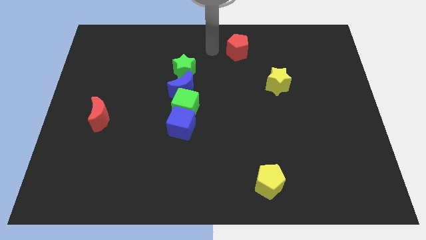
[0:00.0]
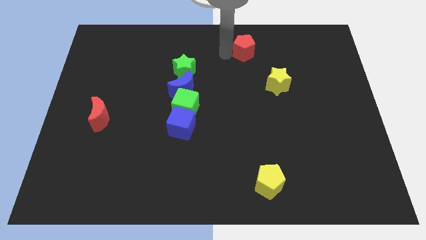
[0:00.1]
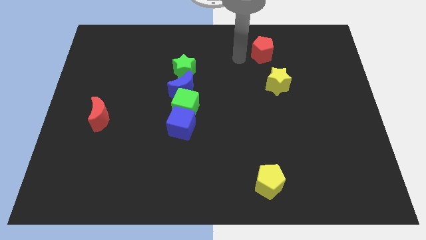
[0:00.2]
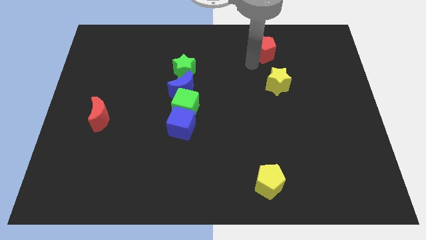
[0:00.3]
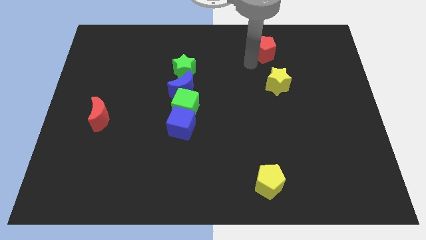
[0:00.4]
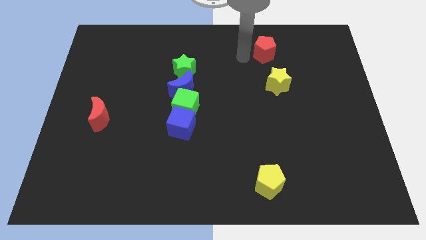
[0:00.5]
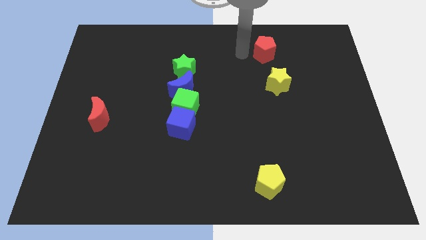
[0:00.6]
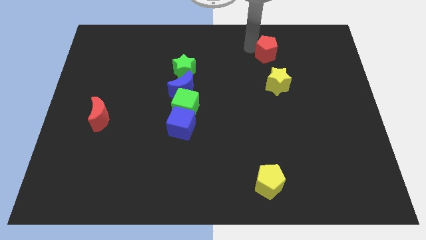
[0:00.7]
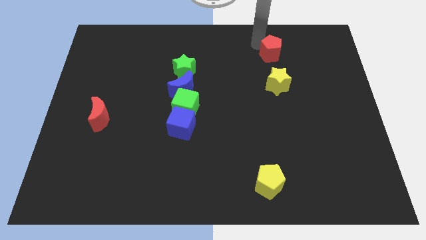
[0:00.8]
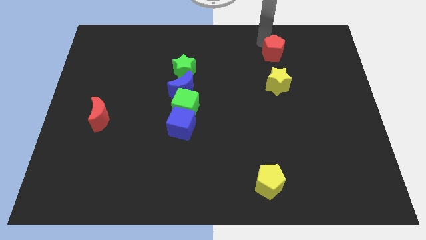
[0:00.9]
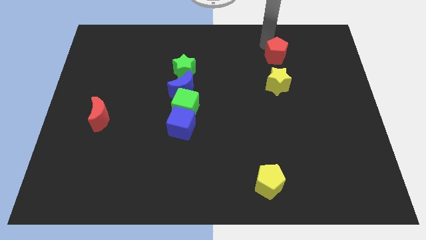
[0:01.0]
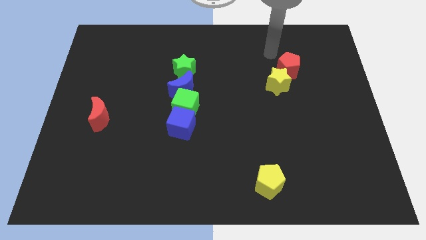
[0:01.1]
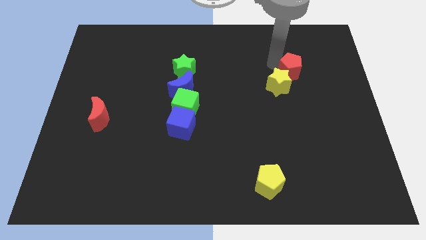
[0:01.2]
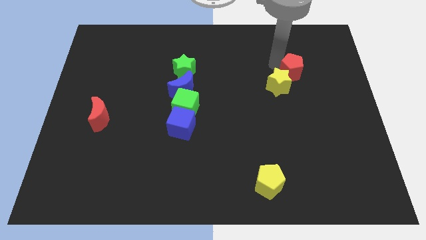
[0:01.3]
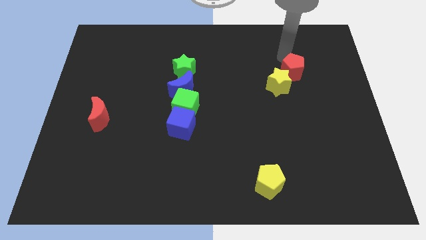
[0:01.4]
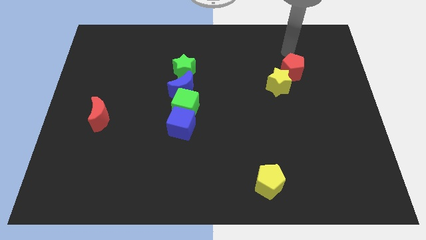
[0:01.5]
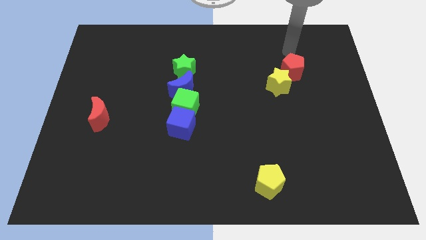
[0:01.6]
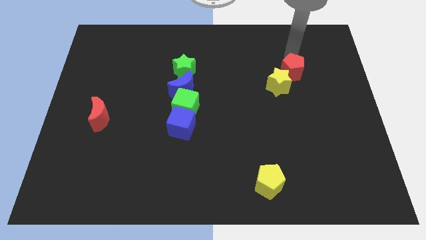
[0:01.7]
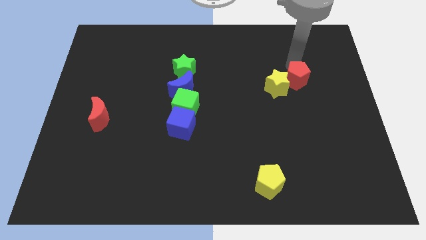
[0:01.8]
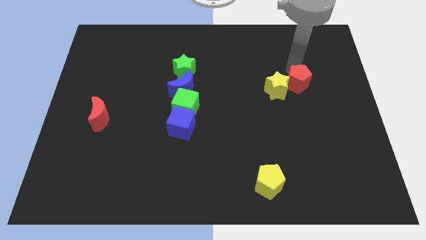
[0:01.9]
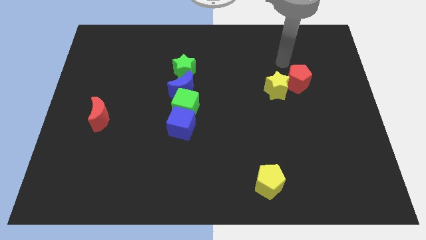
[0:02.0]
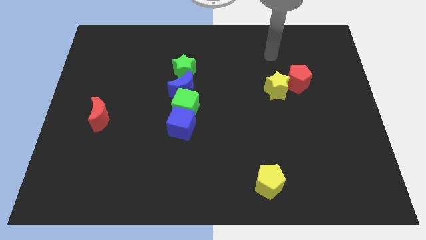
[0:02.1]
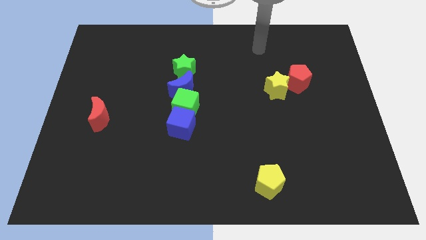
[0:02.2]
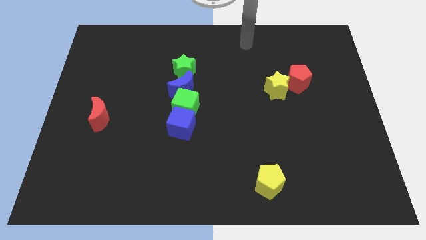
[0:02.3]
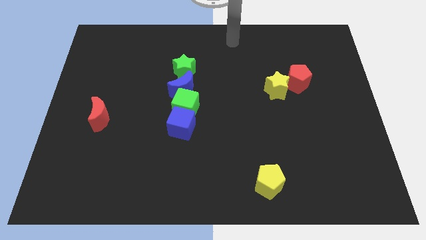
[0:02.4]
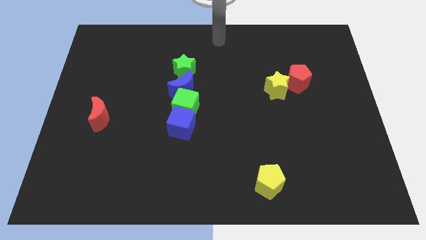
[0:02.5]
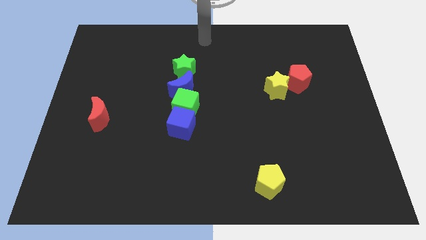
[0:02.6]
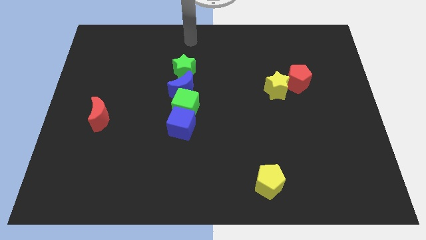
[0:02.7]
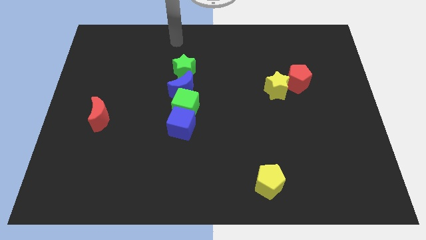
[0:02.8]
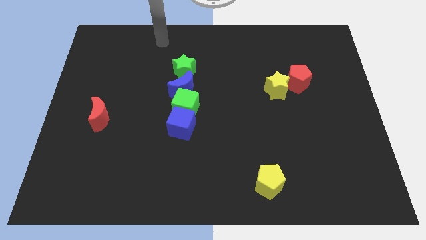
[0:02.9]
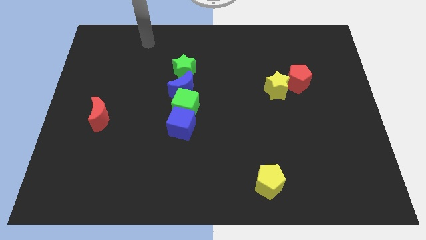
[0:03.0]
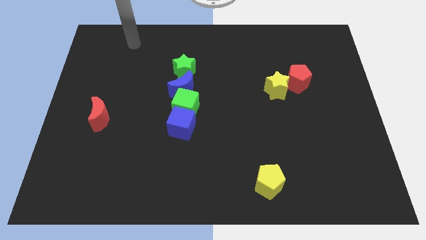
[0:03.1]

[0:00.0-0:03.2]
push the red pentagon into the yellow star

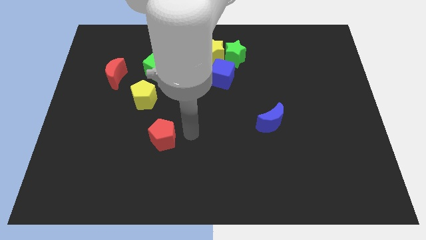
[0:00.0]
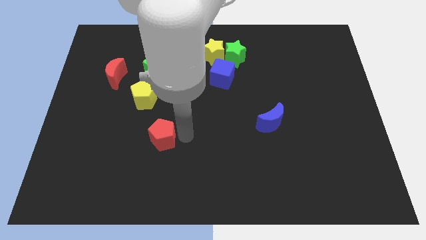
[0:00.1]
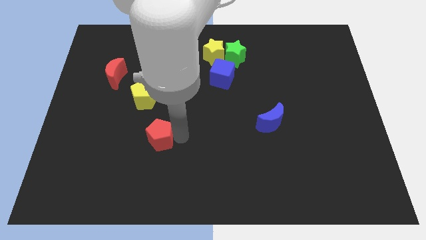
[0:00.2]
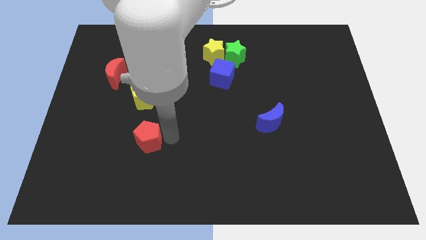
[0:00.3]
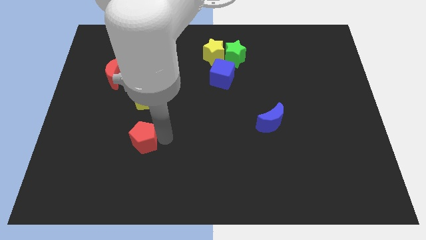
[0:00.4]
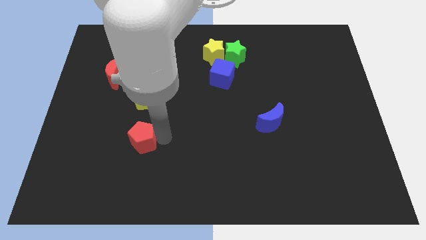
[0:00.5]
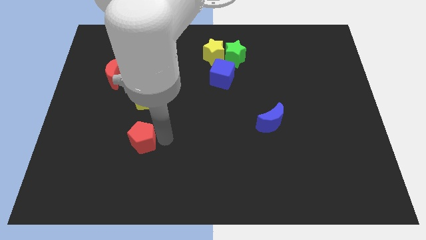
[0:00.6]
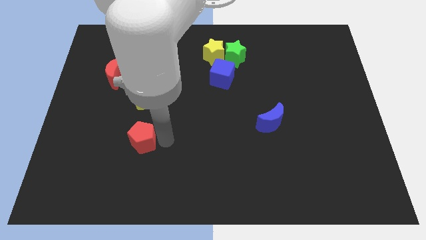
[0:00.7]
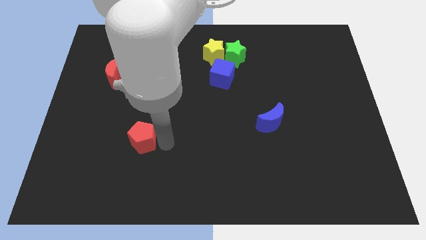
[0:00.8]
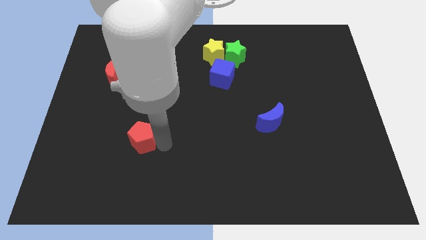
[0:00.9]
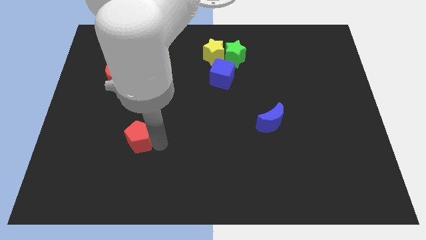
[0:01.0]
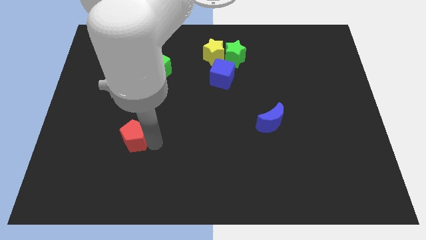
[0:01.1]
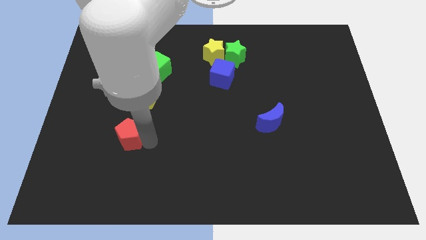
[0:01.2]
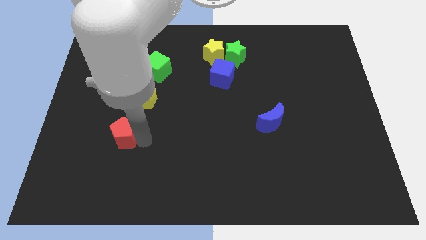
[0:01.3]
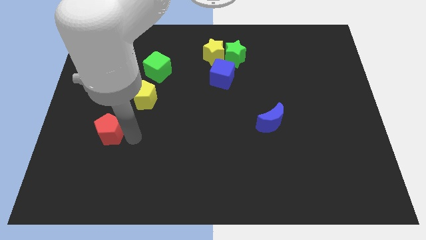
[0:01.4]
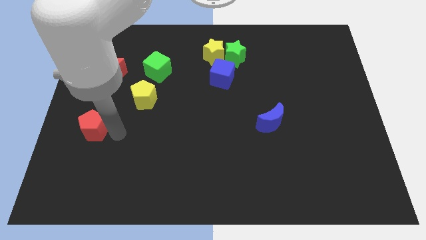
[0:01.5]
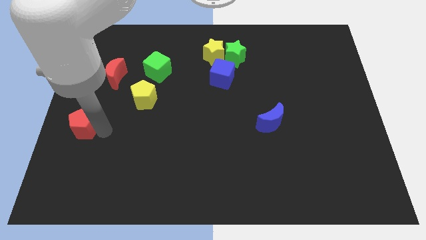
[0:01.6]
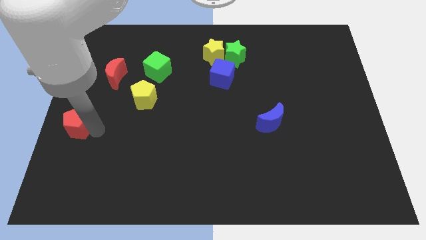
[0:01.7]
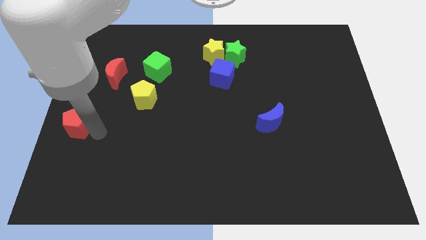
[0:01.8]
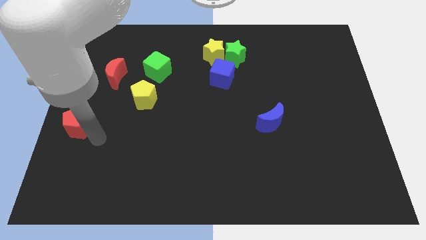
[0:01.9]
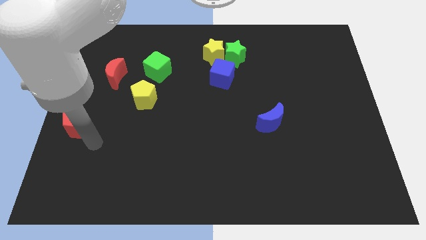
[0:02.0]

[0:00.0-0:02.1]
move the red pentagon to the left center of the board

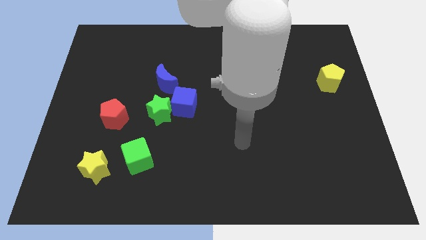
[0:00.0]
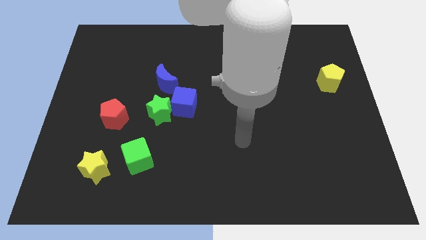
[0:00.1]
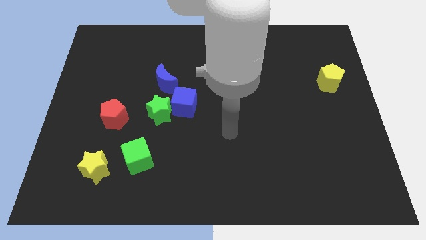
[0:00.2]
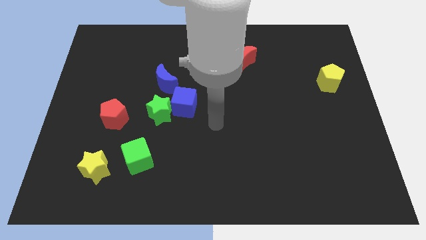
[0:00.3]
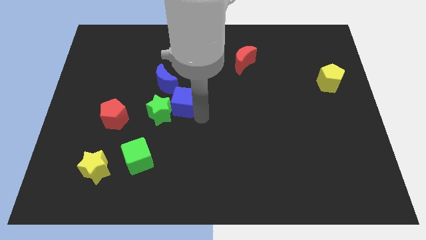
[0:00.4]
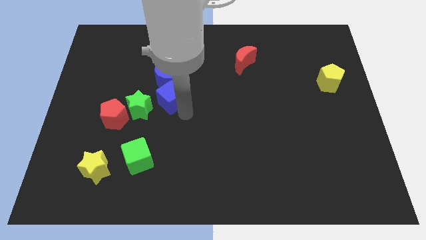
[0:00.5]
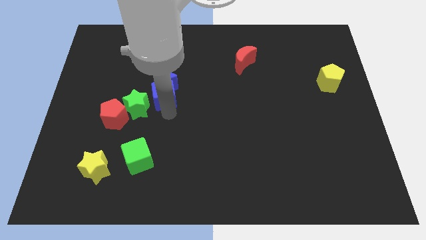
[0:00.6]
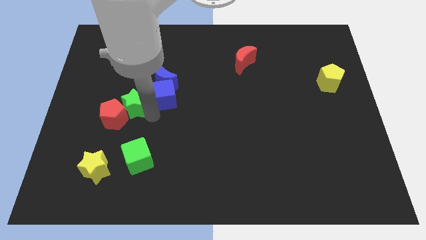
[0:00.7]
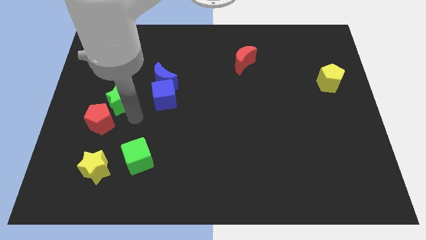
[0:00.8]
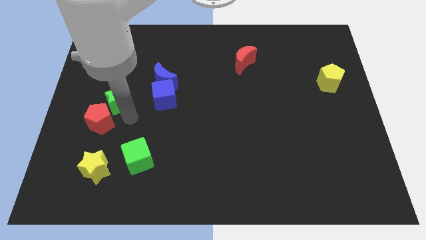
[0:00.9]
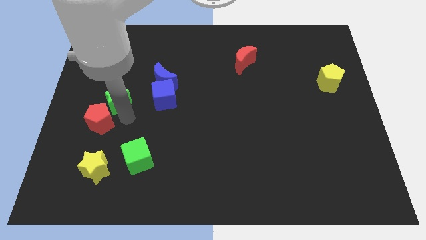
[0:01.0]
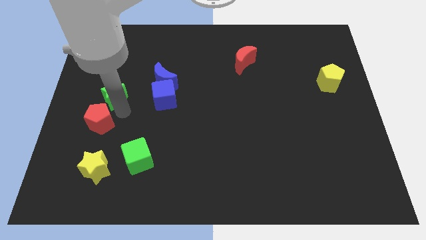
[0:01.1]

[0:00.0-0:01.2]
separate the green star and the blue cube

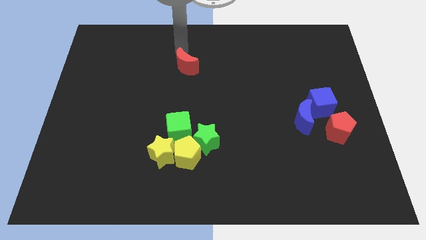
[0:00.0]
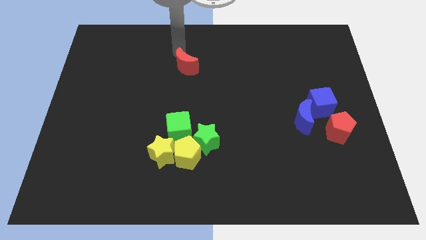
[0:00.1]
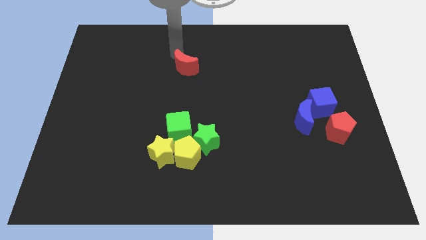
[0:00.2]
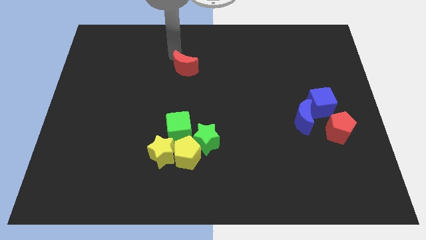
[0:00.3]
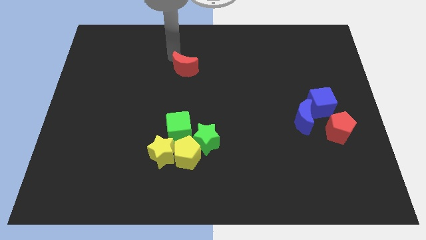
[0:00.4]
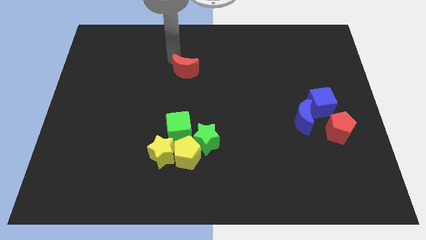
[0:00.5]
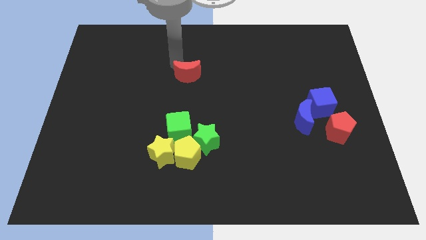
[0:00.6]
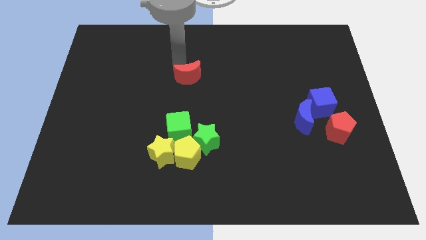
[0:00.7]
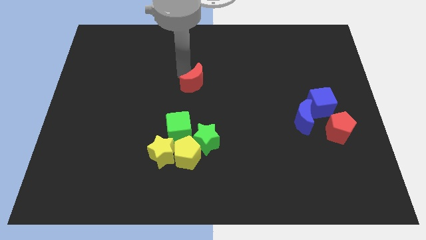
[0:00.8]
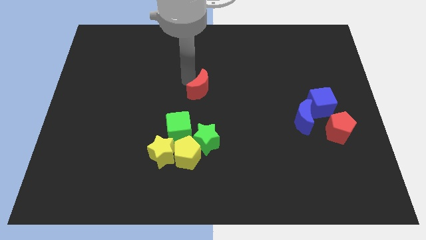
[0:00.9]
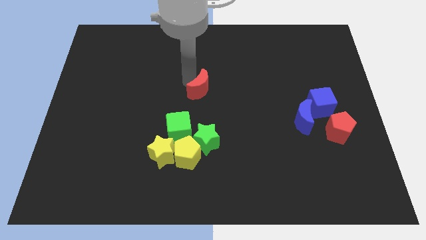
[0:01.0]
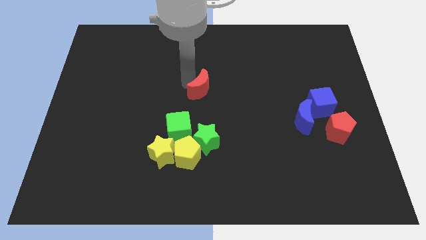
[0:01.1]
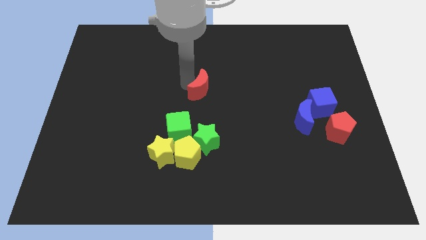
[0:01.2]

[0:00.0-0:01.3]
move the red crescent above the group of blocks

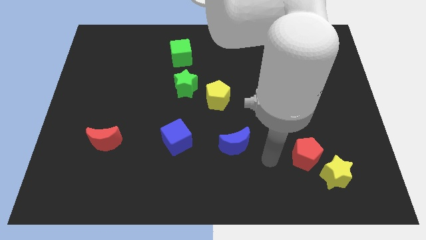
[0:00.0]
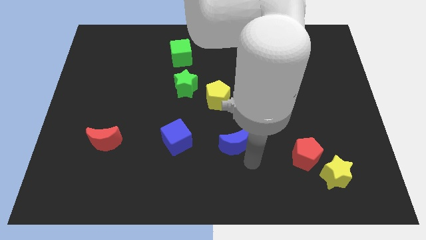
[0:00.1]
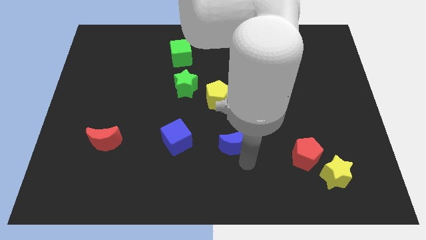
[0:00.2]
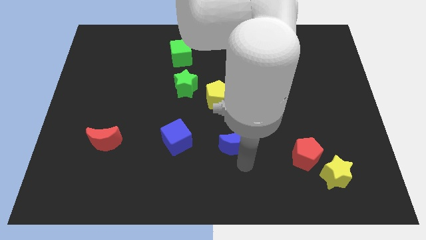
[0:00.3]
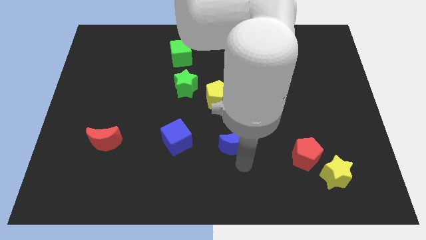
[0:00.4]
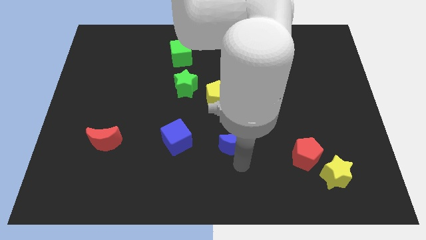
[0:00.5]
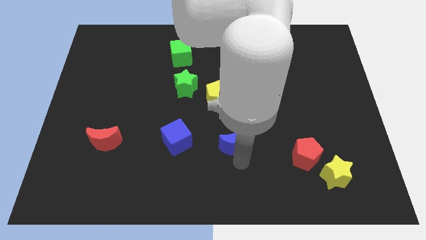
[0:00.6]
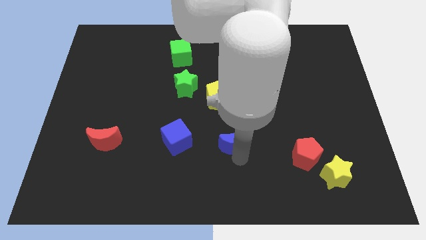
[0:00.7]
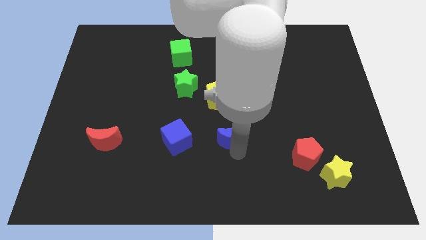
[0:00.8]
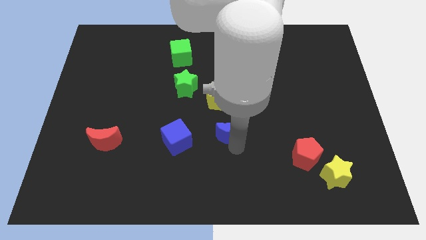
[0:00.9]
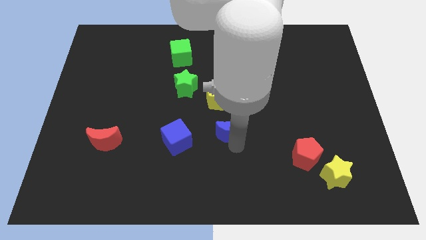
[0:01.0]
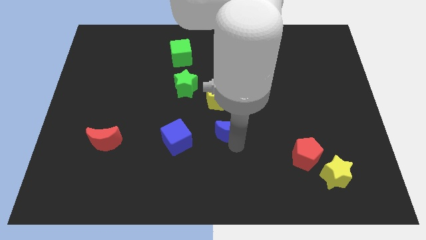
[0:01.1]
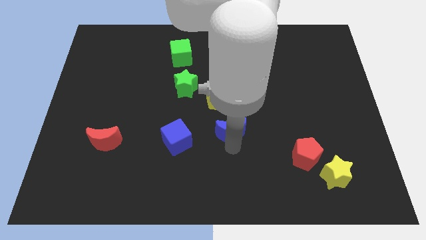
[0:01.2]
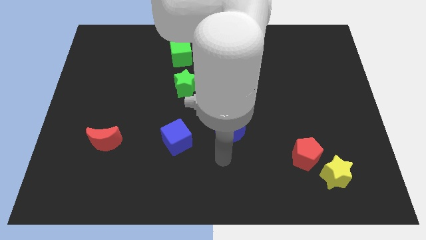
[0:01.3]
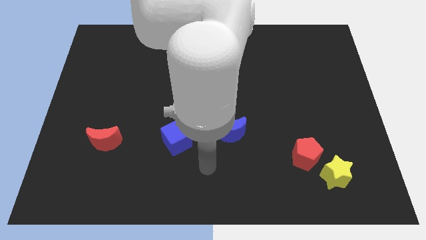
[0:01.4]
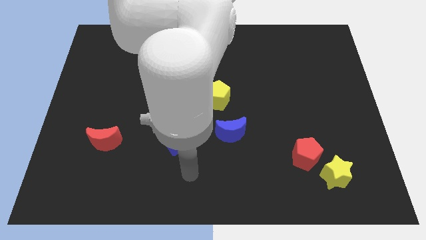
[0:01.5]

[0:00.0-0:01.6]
move the blue crescent to the top of the board
